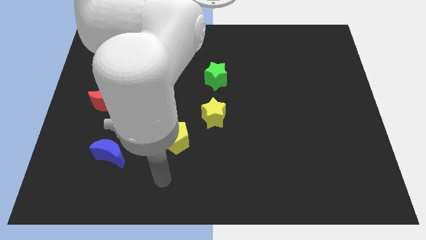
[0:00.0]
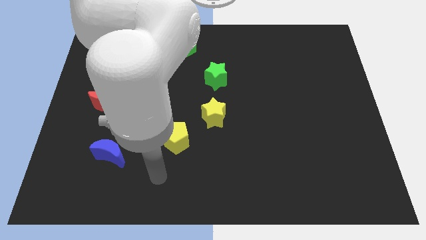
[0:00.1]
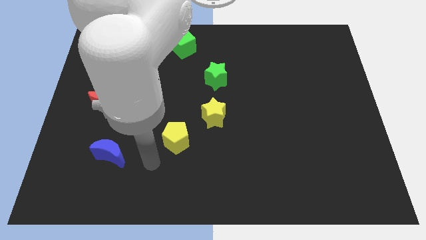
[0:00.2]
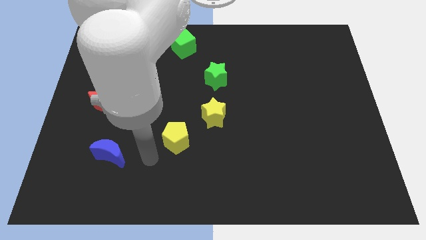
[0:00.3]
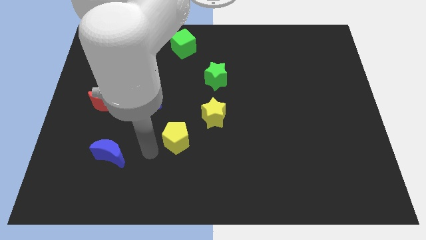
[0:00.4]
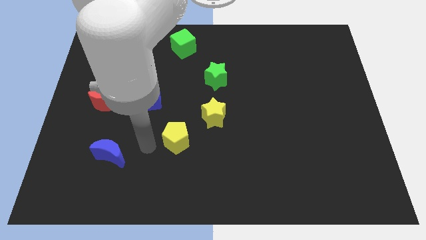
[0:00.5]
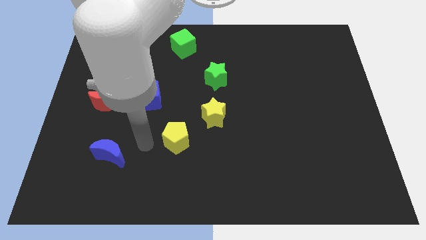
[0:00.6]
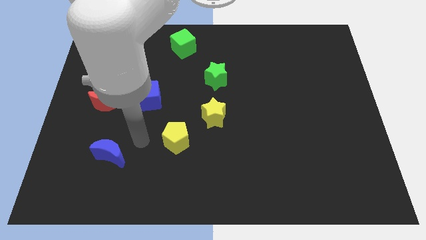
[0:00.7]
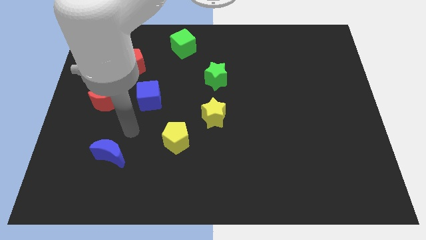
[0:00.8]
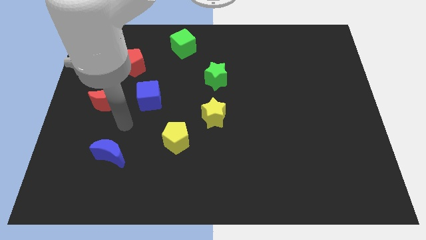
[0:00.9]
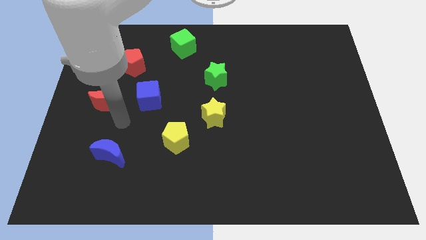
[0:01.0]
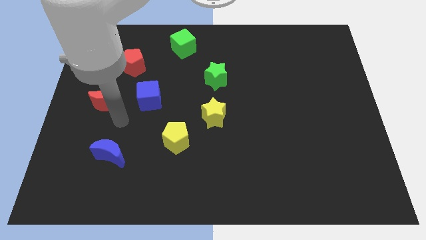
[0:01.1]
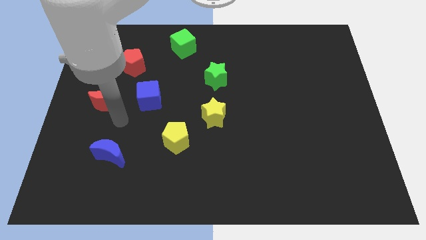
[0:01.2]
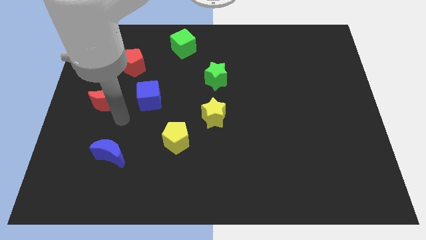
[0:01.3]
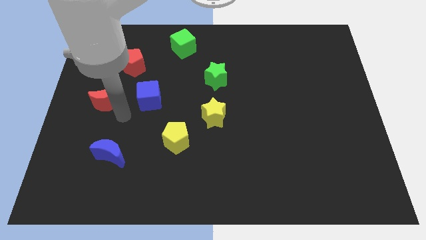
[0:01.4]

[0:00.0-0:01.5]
point your arm at the bottom of the red crescent

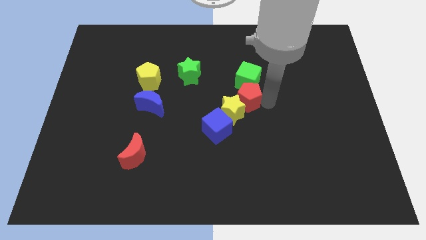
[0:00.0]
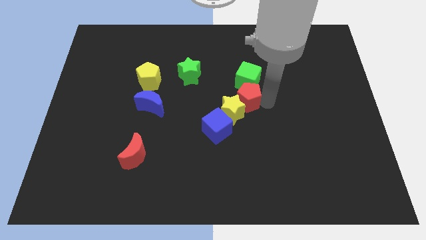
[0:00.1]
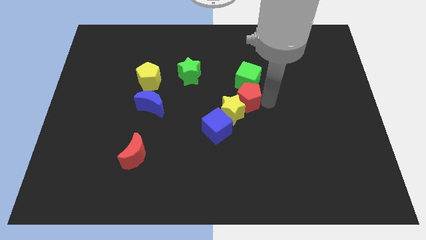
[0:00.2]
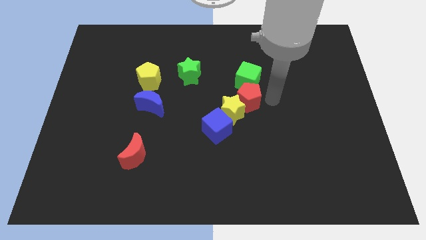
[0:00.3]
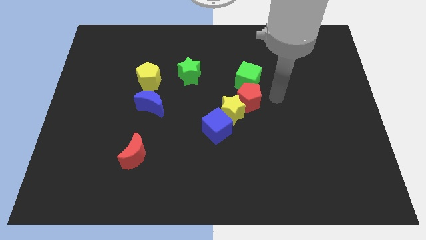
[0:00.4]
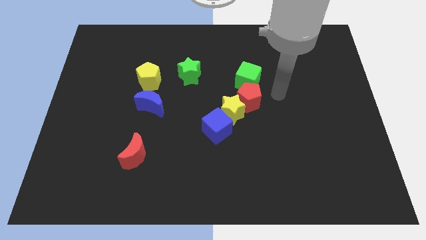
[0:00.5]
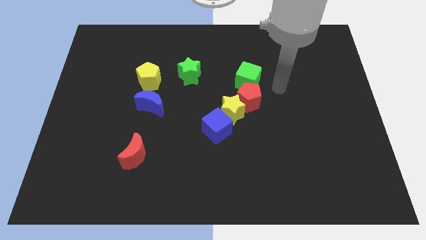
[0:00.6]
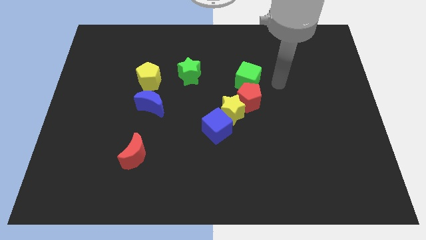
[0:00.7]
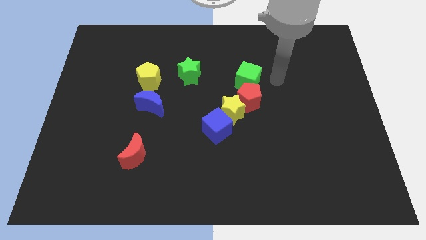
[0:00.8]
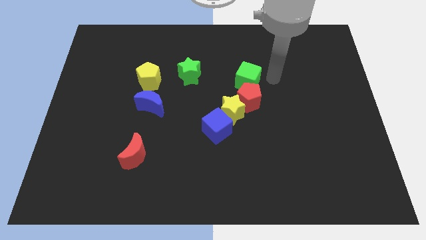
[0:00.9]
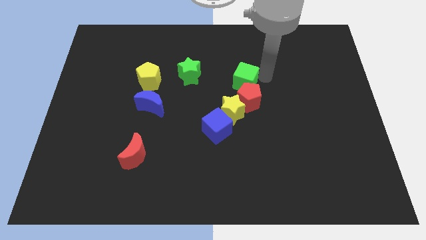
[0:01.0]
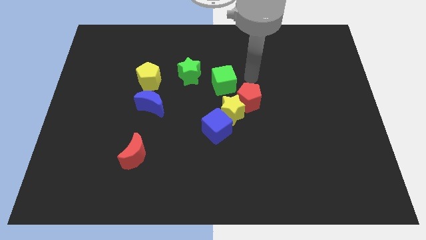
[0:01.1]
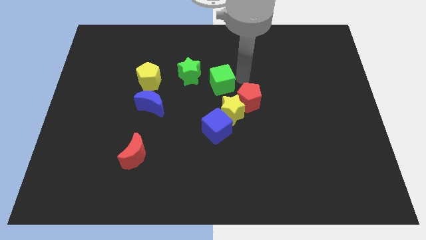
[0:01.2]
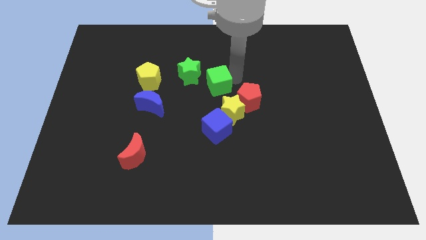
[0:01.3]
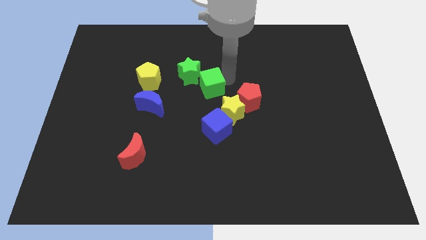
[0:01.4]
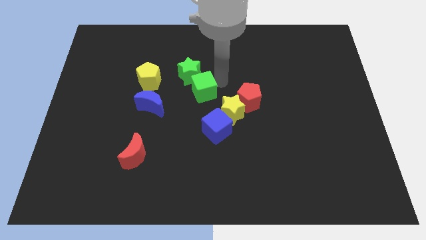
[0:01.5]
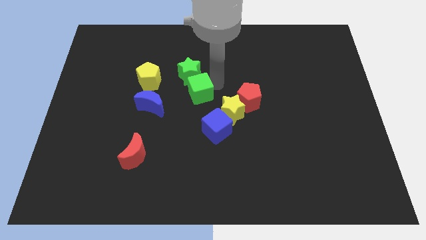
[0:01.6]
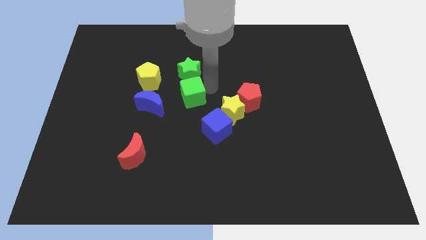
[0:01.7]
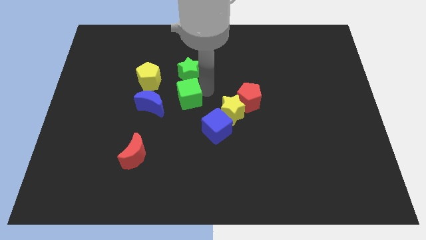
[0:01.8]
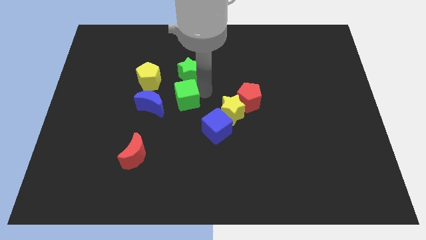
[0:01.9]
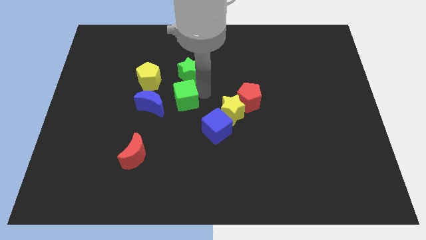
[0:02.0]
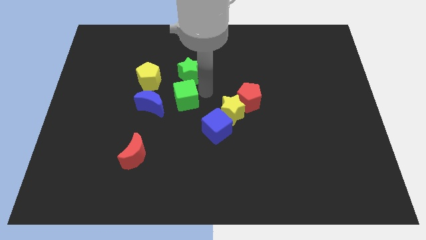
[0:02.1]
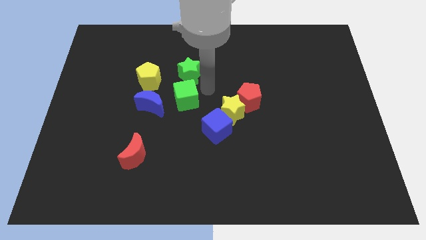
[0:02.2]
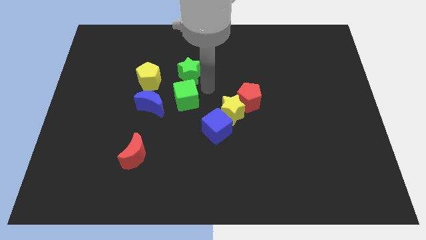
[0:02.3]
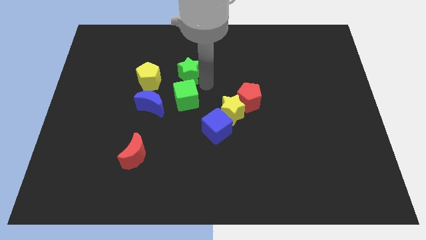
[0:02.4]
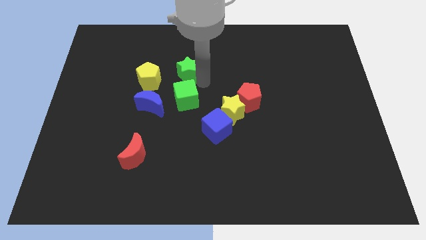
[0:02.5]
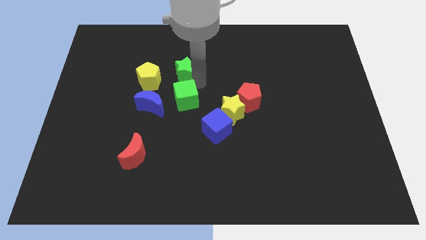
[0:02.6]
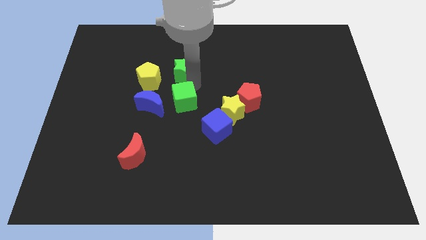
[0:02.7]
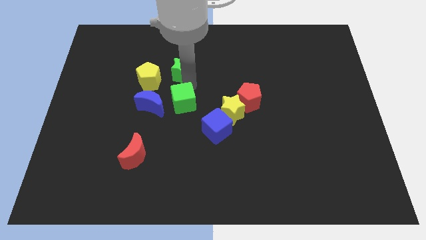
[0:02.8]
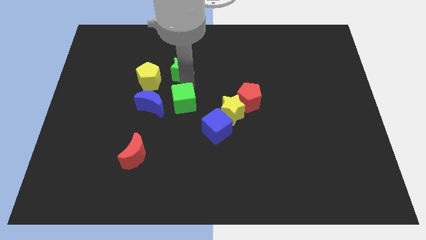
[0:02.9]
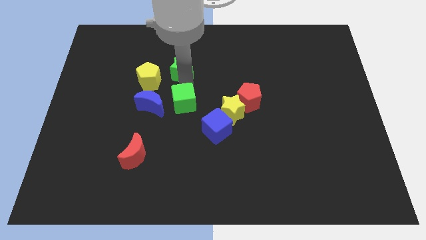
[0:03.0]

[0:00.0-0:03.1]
place the green cube below the green star

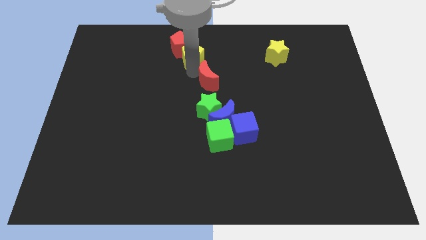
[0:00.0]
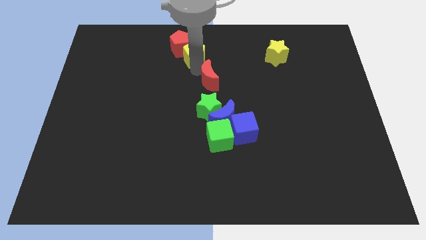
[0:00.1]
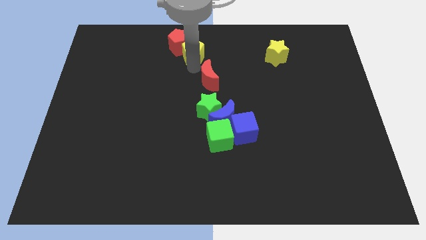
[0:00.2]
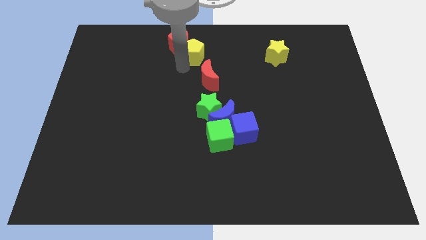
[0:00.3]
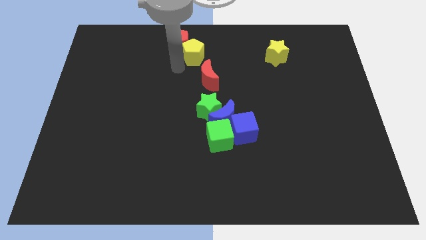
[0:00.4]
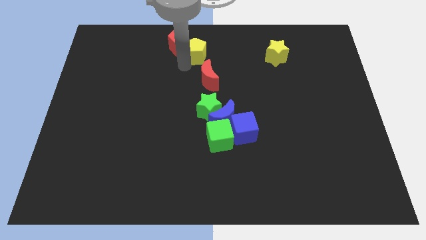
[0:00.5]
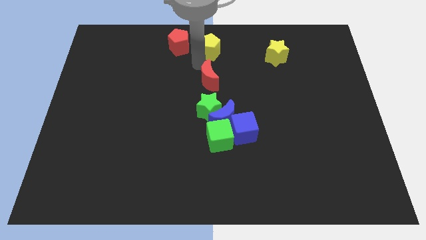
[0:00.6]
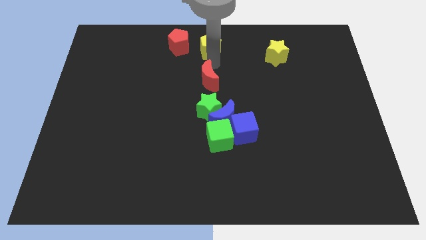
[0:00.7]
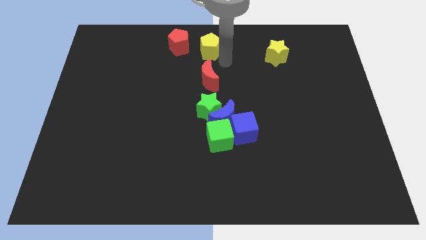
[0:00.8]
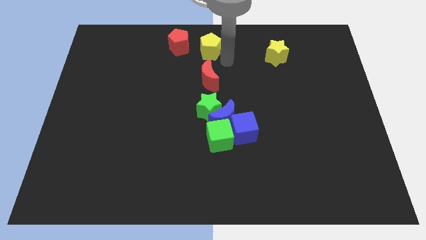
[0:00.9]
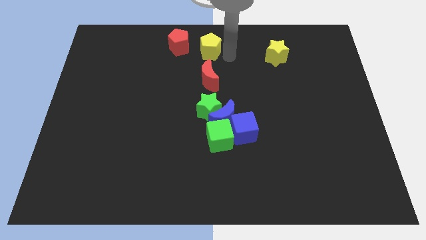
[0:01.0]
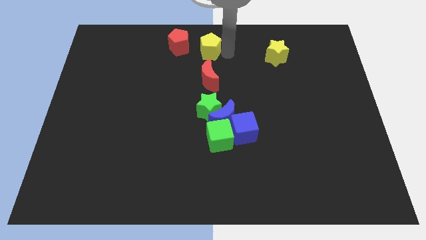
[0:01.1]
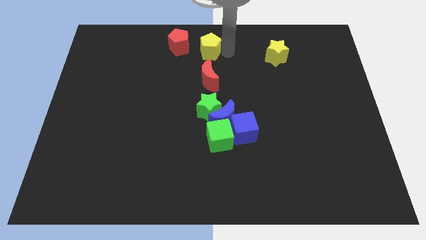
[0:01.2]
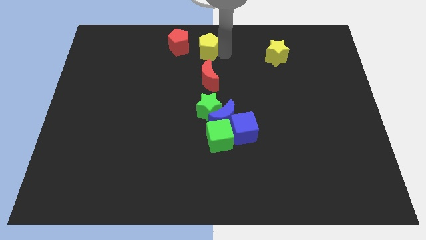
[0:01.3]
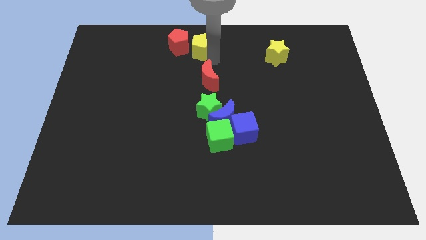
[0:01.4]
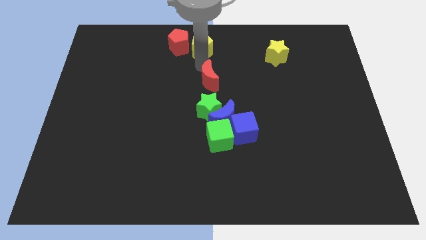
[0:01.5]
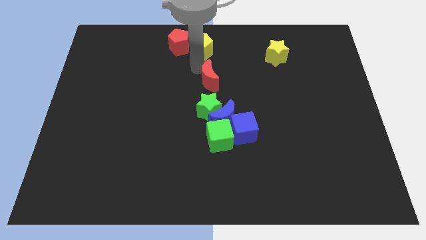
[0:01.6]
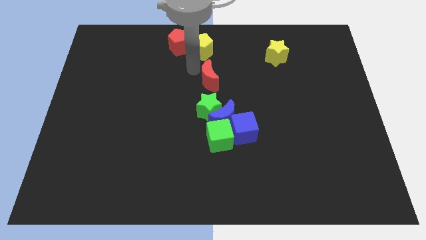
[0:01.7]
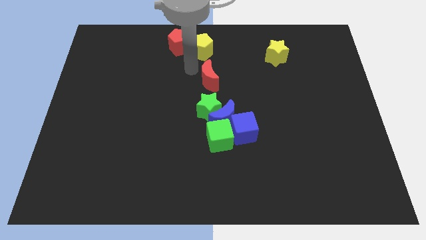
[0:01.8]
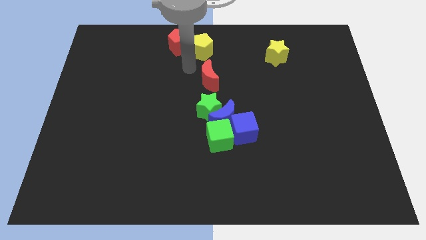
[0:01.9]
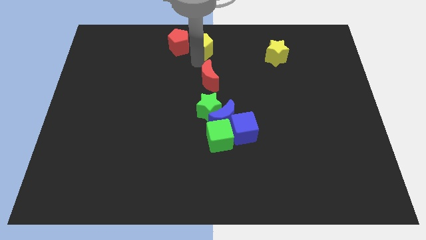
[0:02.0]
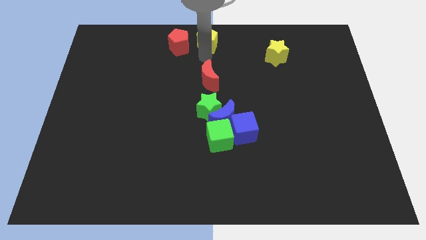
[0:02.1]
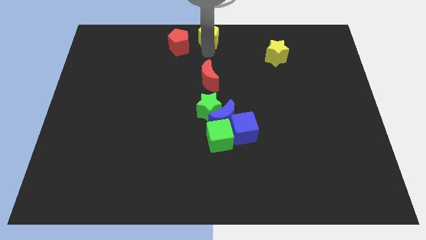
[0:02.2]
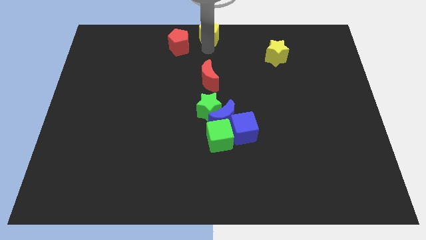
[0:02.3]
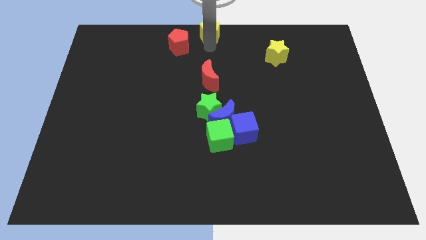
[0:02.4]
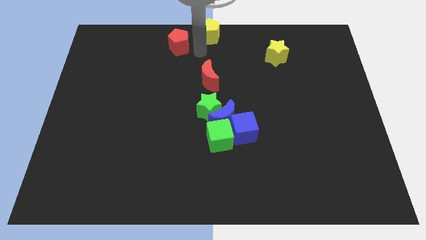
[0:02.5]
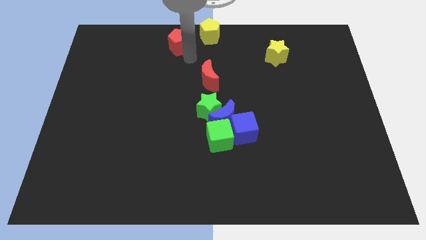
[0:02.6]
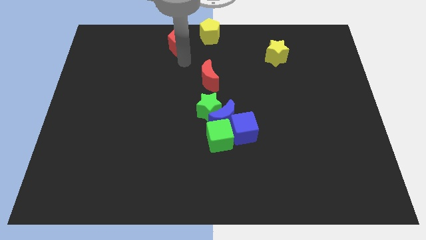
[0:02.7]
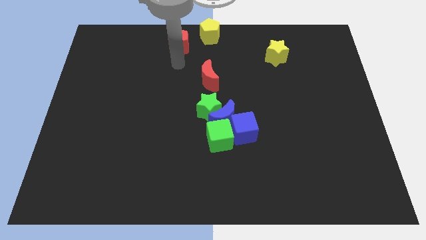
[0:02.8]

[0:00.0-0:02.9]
place the yellow pentagon at the top center of the board

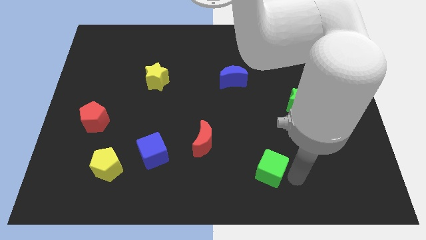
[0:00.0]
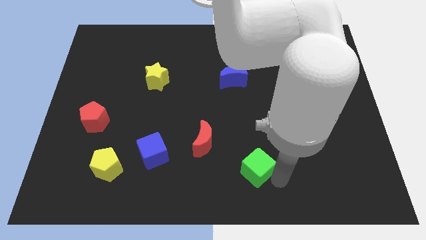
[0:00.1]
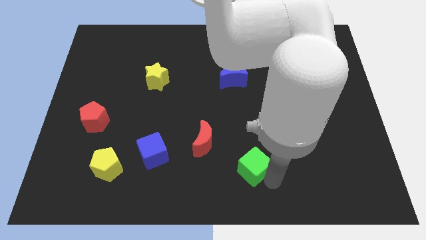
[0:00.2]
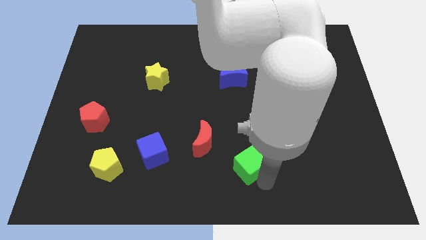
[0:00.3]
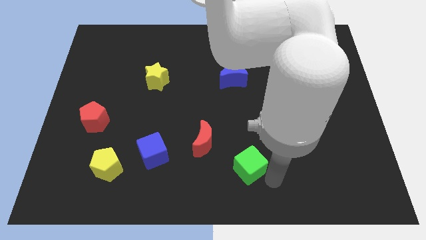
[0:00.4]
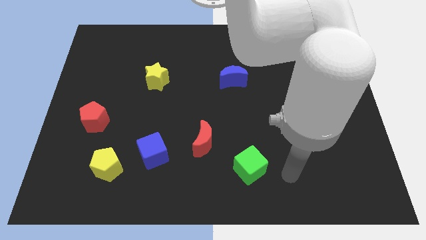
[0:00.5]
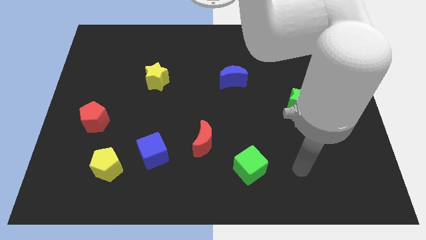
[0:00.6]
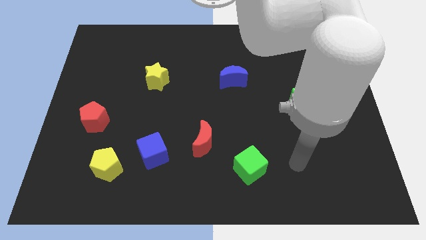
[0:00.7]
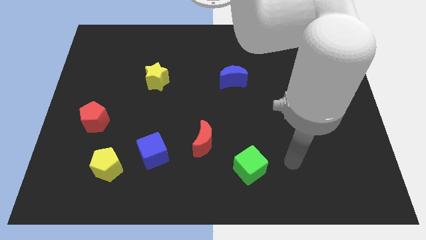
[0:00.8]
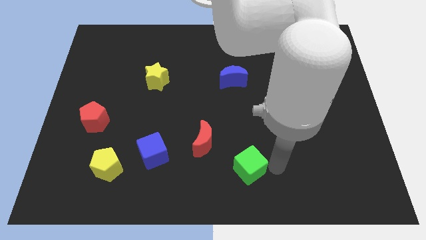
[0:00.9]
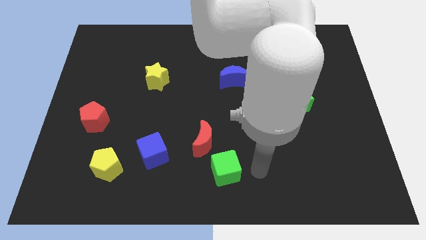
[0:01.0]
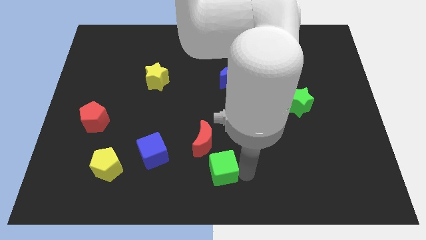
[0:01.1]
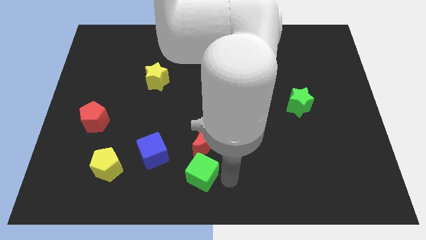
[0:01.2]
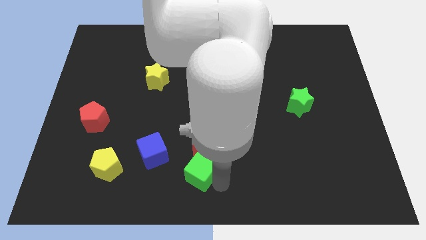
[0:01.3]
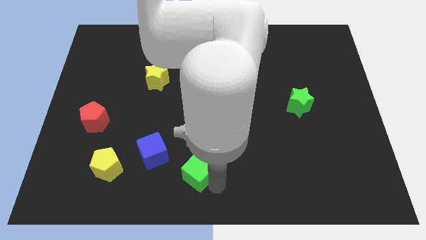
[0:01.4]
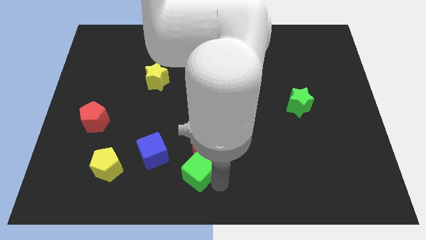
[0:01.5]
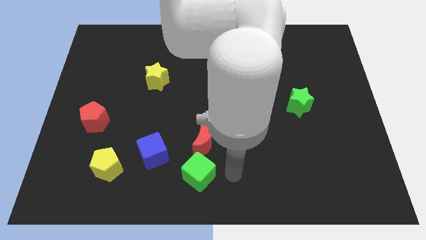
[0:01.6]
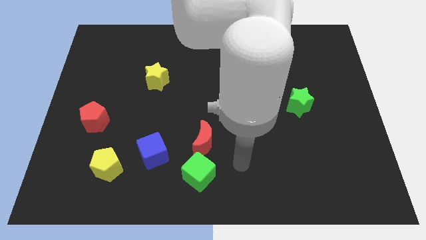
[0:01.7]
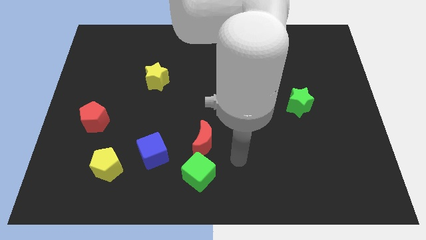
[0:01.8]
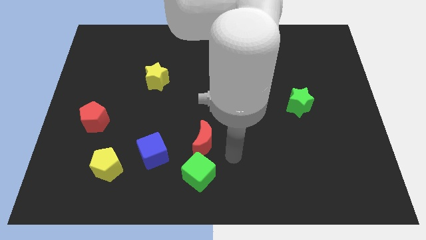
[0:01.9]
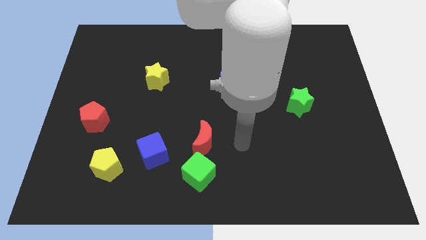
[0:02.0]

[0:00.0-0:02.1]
move the green cube down to the red crescent
